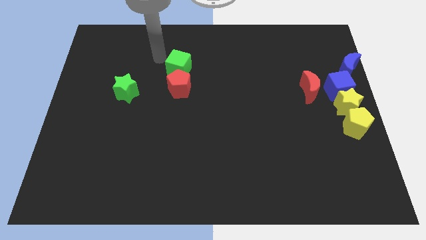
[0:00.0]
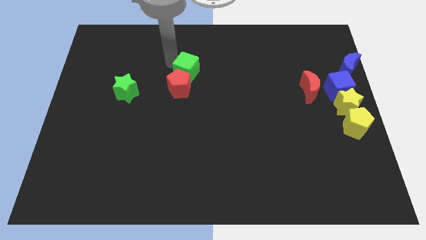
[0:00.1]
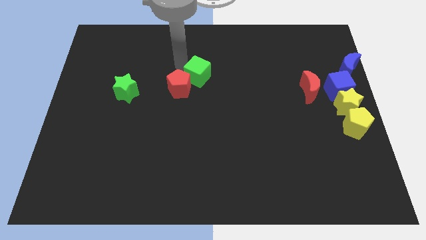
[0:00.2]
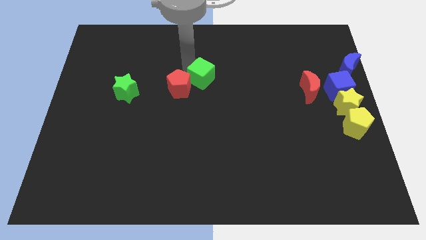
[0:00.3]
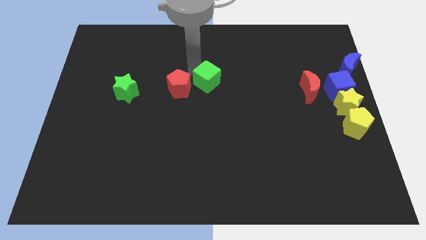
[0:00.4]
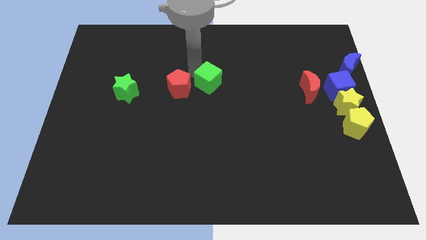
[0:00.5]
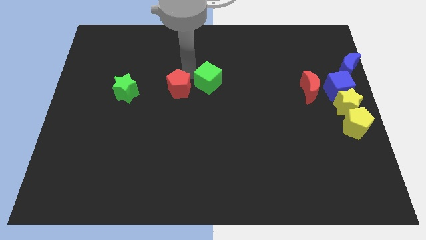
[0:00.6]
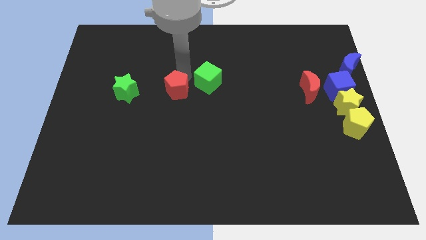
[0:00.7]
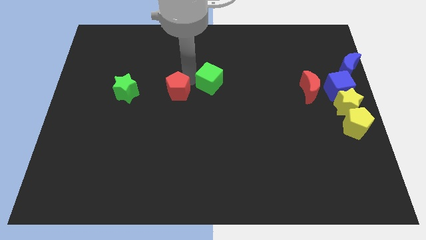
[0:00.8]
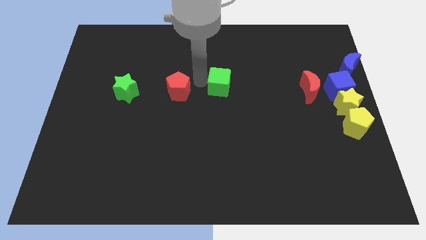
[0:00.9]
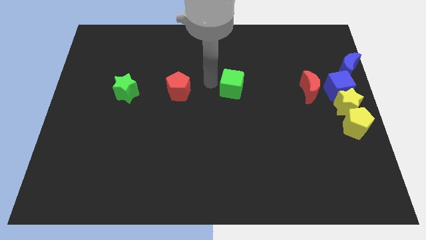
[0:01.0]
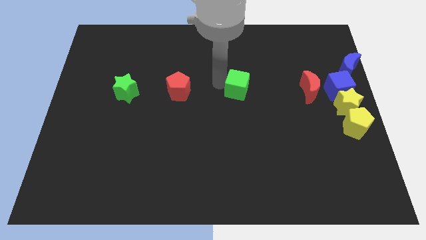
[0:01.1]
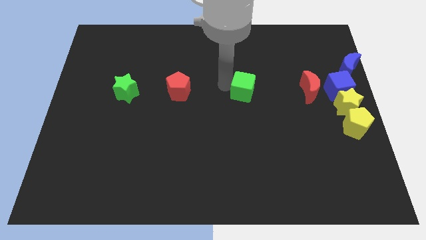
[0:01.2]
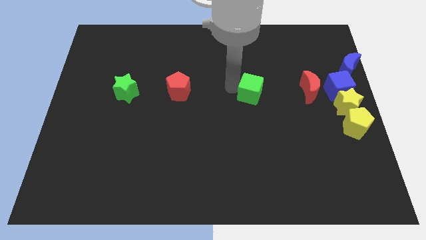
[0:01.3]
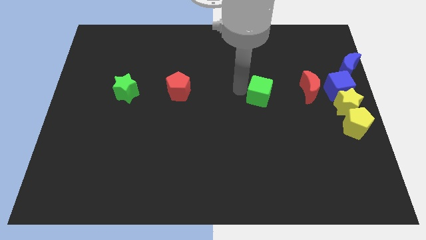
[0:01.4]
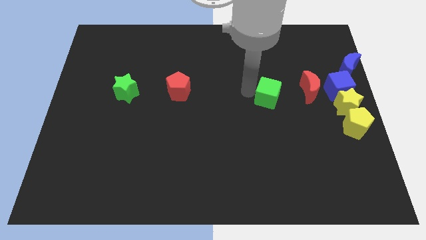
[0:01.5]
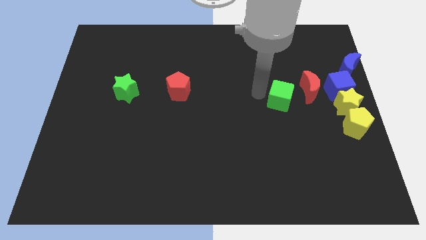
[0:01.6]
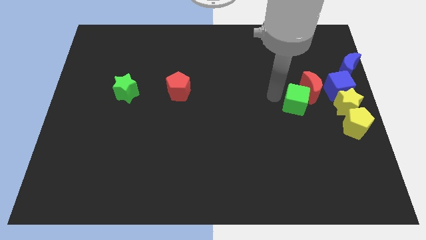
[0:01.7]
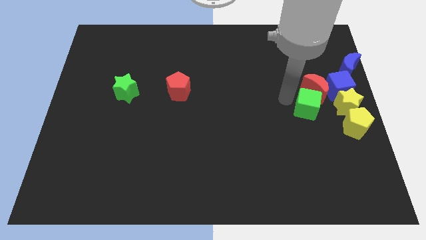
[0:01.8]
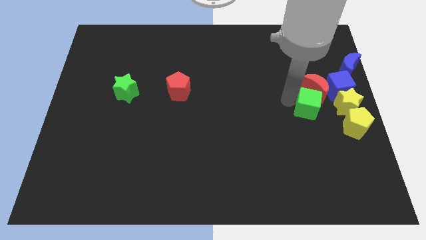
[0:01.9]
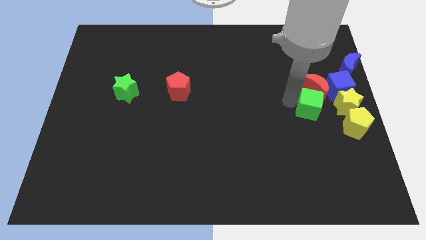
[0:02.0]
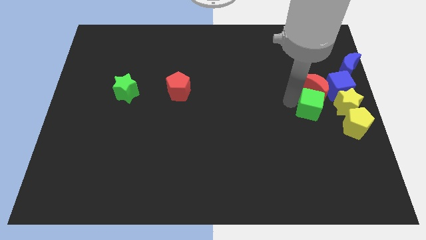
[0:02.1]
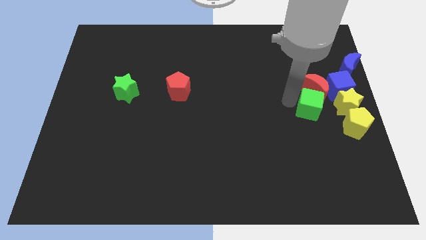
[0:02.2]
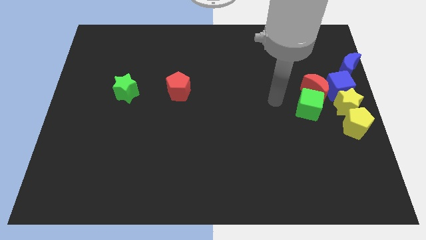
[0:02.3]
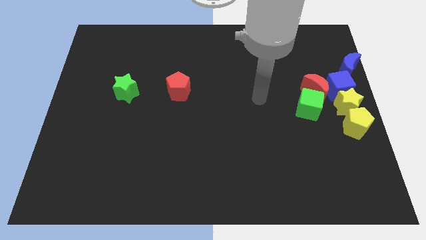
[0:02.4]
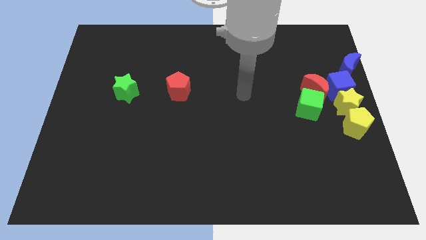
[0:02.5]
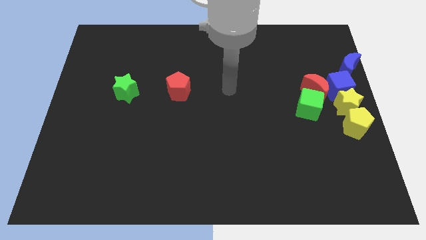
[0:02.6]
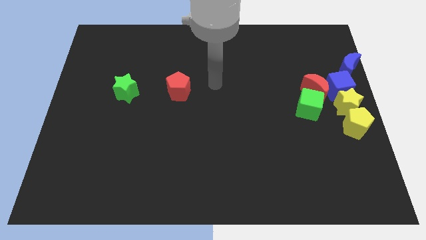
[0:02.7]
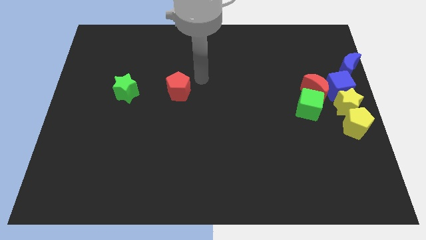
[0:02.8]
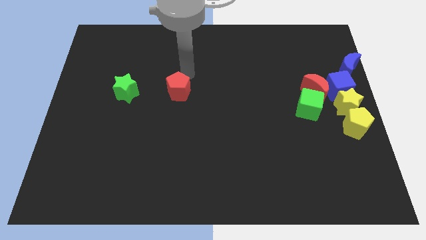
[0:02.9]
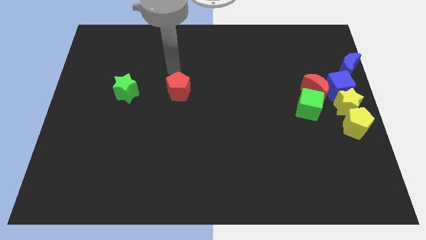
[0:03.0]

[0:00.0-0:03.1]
separate the green cube from the red pentagon

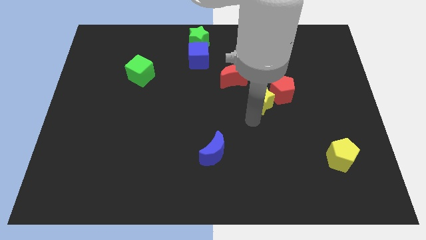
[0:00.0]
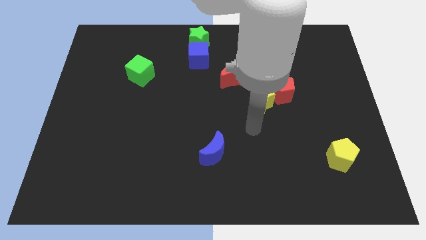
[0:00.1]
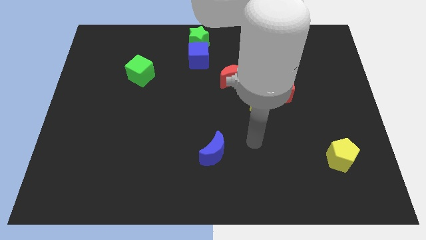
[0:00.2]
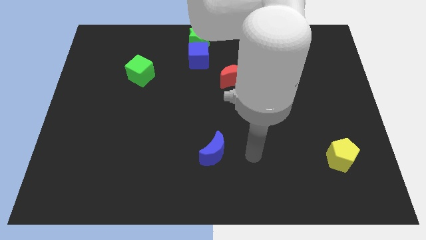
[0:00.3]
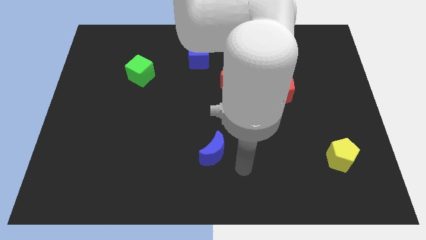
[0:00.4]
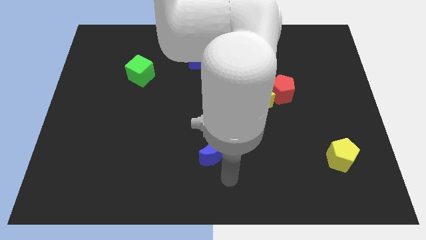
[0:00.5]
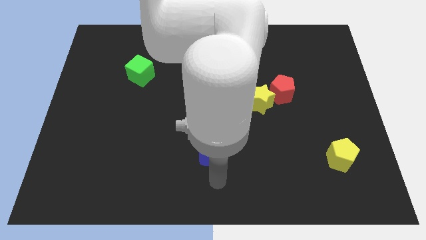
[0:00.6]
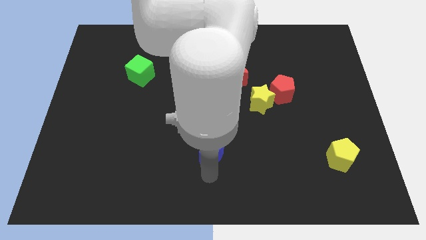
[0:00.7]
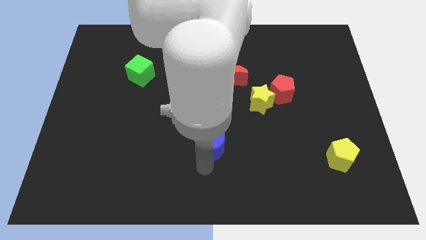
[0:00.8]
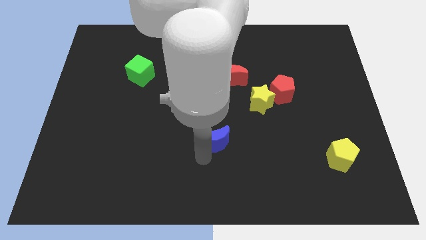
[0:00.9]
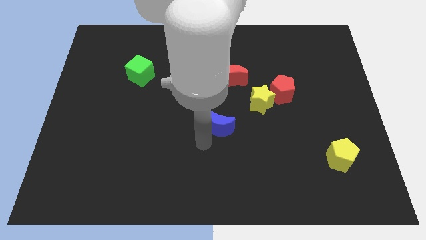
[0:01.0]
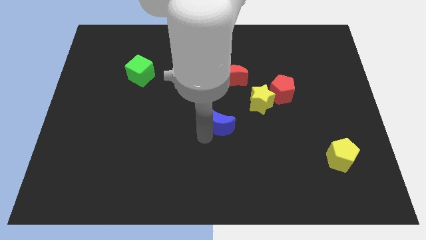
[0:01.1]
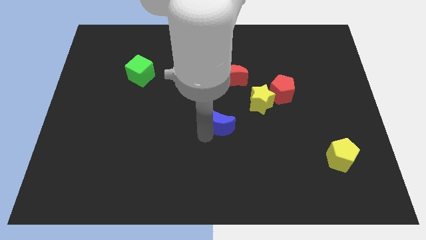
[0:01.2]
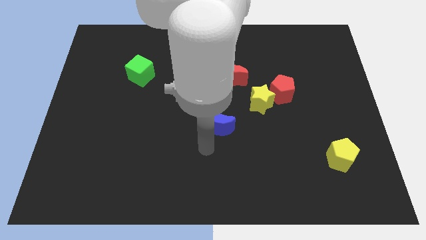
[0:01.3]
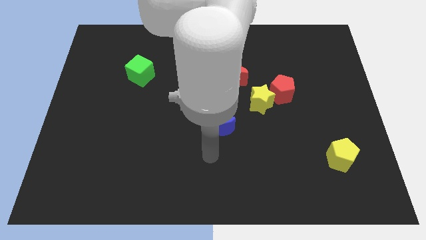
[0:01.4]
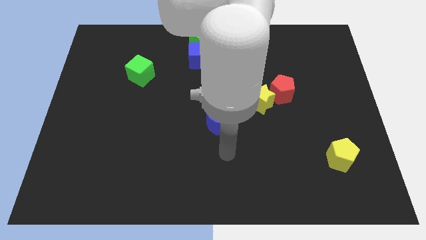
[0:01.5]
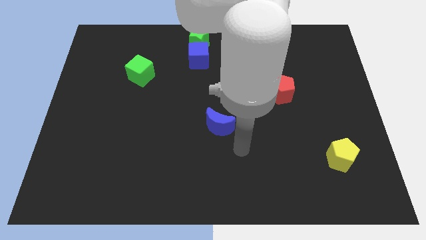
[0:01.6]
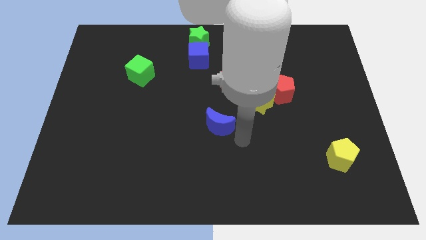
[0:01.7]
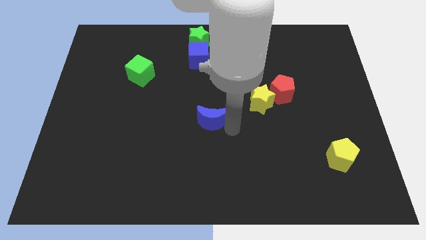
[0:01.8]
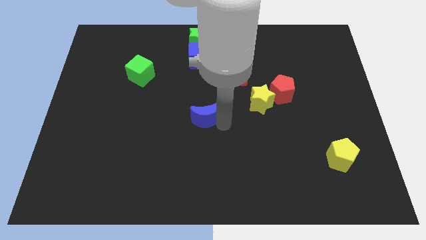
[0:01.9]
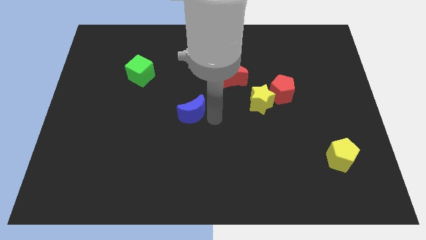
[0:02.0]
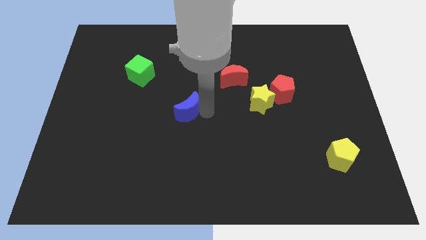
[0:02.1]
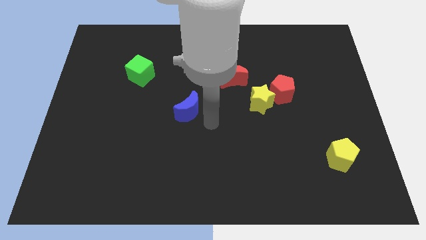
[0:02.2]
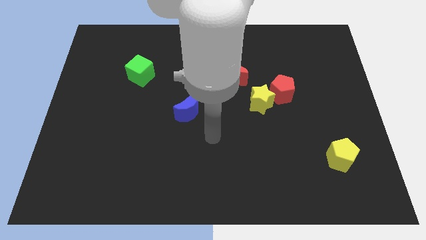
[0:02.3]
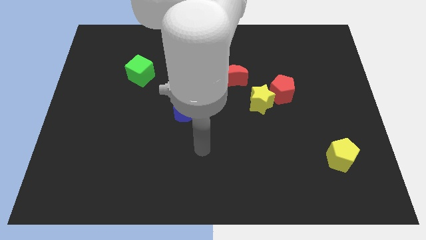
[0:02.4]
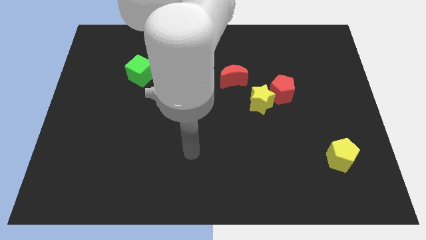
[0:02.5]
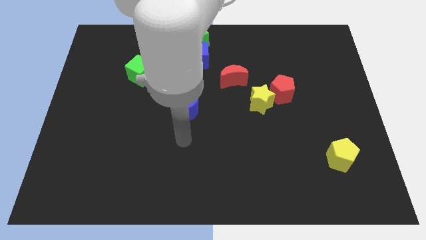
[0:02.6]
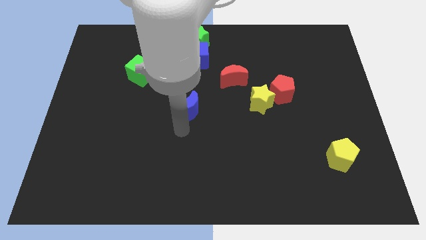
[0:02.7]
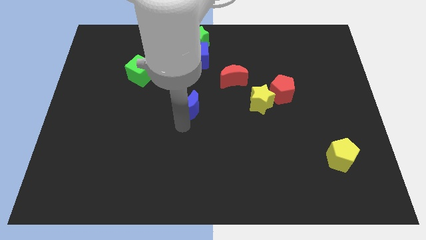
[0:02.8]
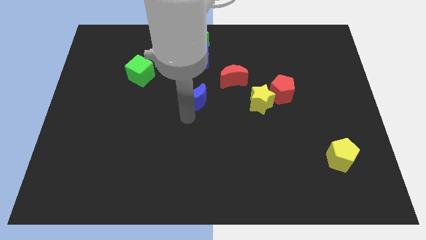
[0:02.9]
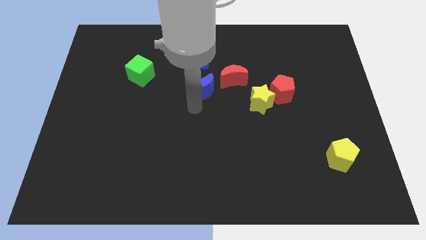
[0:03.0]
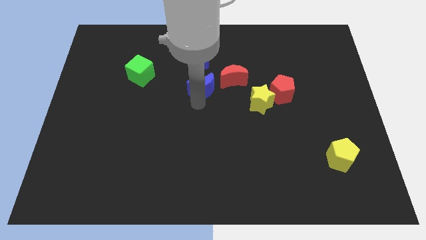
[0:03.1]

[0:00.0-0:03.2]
push blue crescent towards the top side of the board

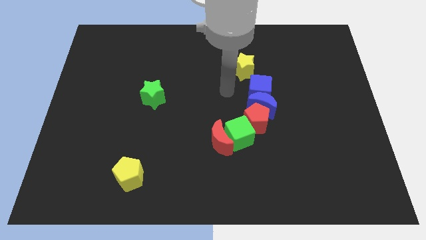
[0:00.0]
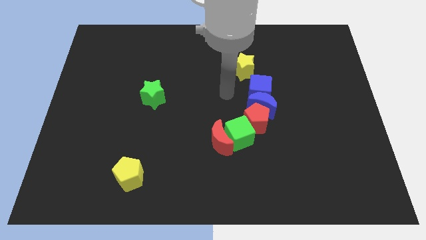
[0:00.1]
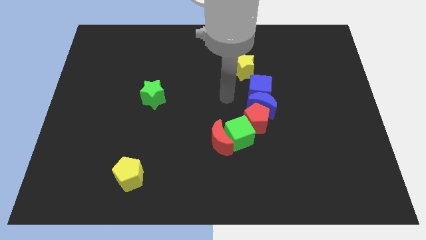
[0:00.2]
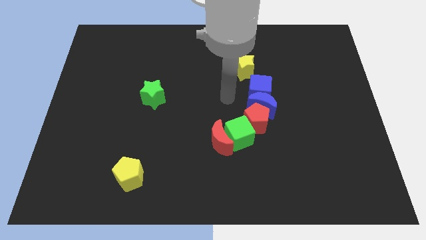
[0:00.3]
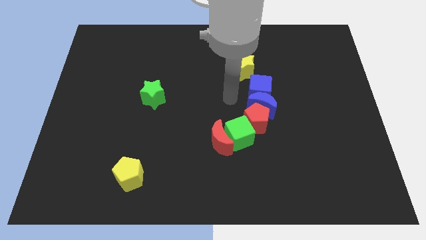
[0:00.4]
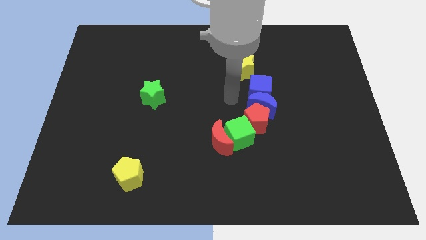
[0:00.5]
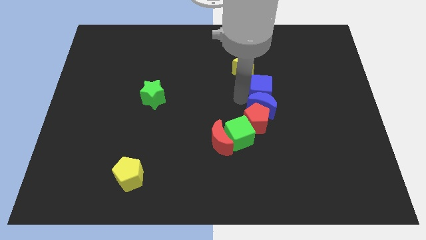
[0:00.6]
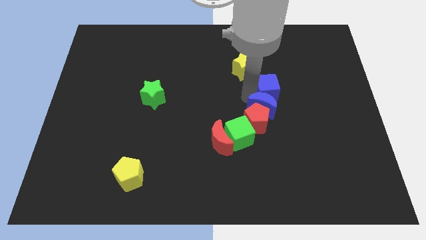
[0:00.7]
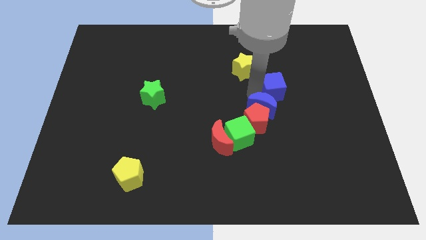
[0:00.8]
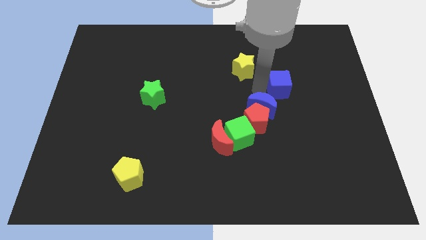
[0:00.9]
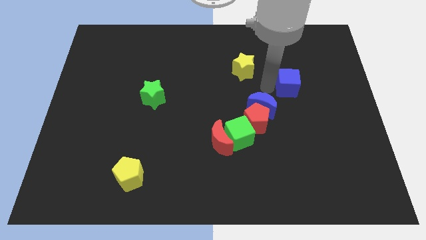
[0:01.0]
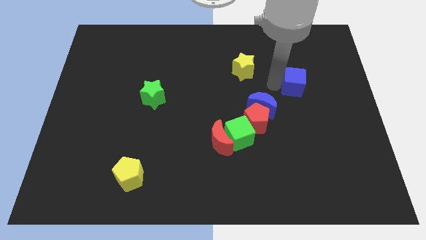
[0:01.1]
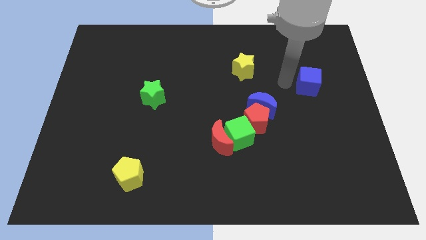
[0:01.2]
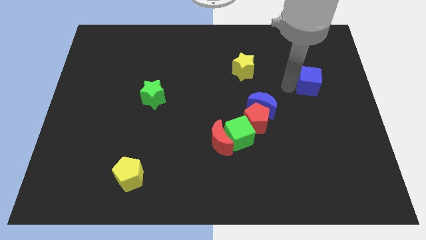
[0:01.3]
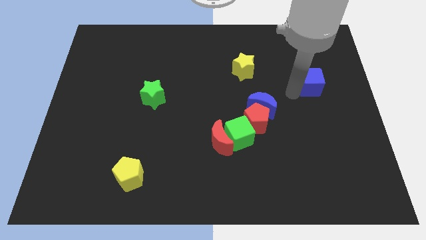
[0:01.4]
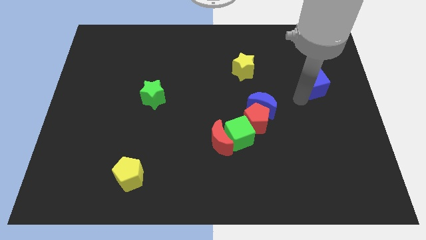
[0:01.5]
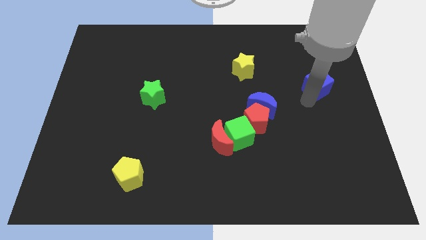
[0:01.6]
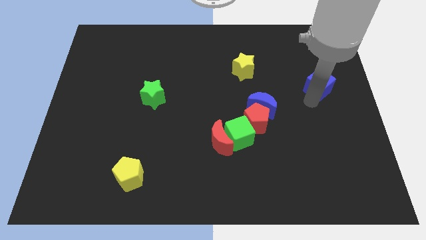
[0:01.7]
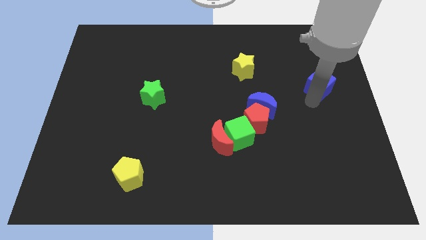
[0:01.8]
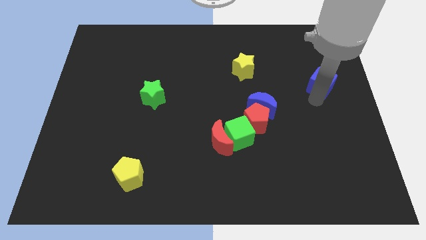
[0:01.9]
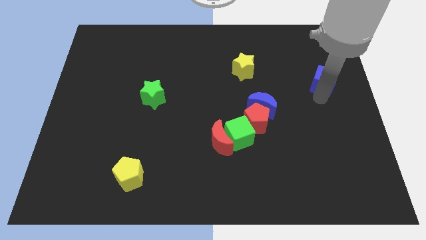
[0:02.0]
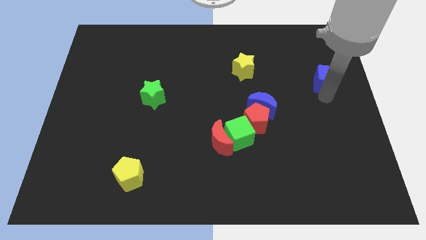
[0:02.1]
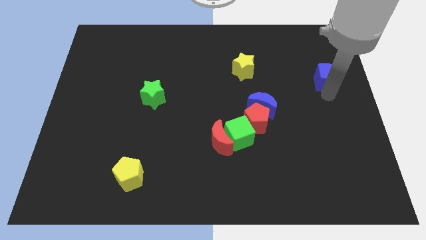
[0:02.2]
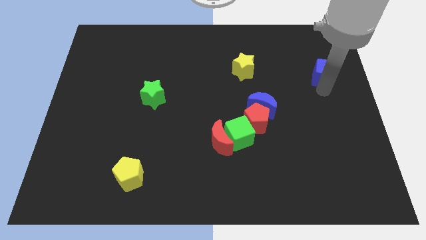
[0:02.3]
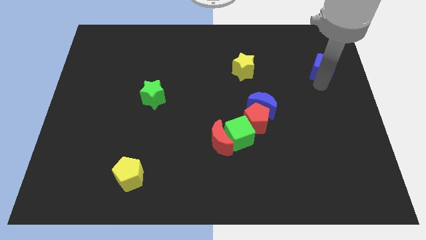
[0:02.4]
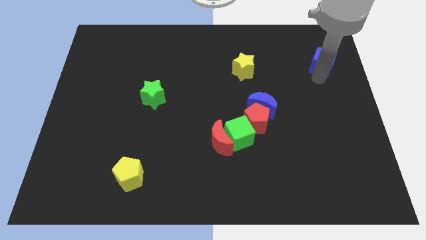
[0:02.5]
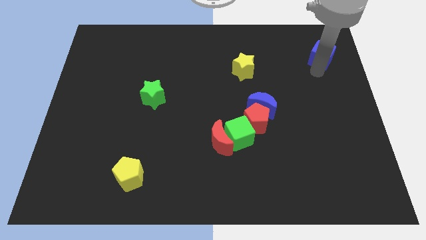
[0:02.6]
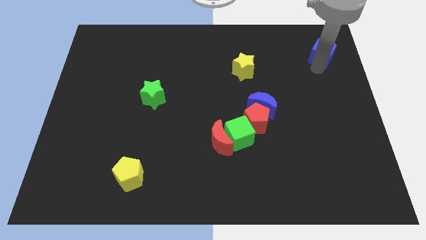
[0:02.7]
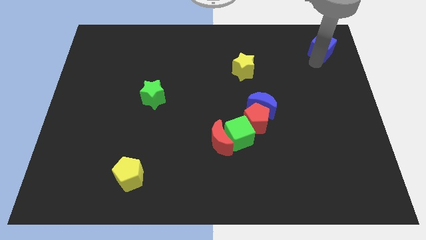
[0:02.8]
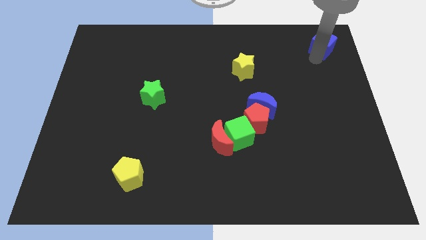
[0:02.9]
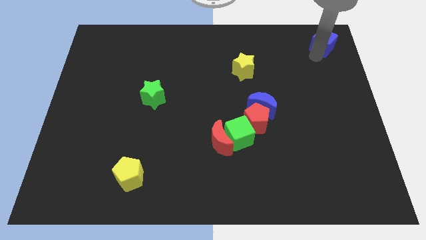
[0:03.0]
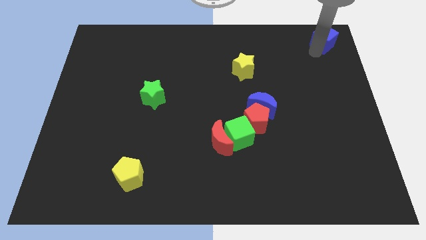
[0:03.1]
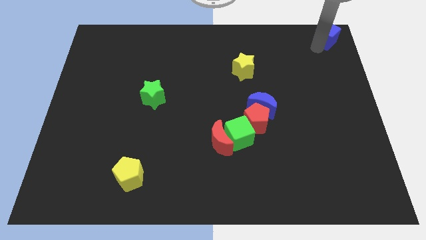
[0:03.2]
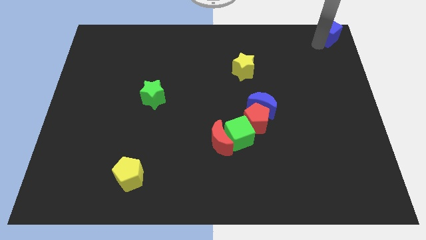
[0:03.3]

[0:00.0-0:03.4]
place the blue cube at top right corner of the board
